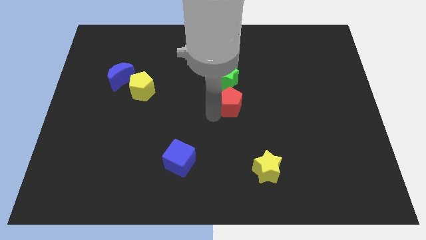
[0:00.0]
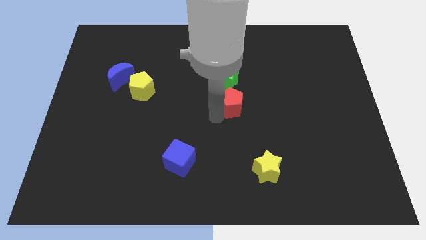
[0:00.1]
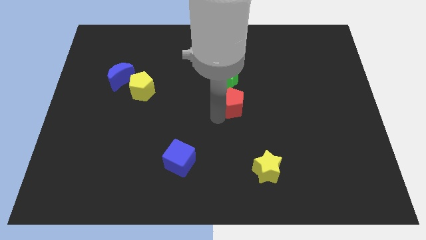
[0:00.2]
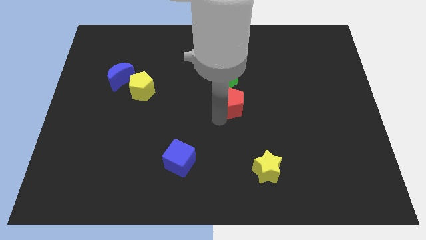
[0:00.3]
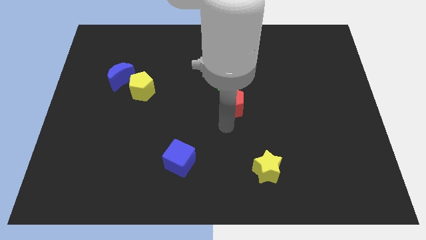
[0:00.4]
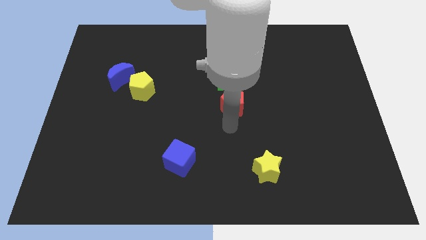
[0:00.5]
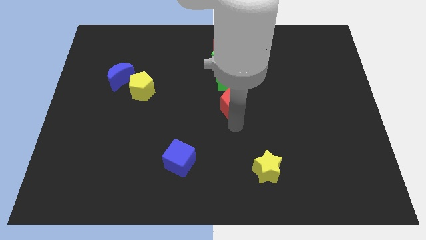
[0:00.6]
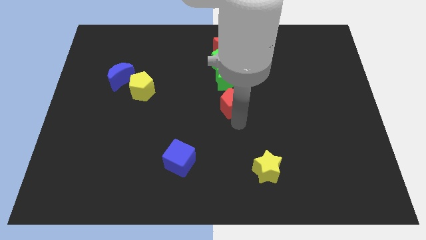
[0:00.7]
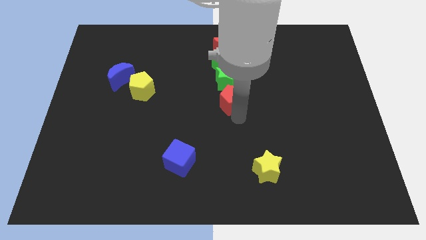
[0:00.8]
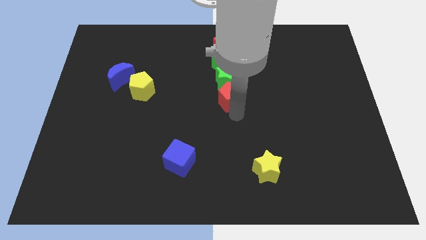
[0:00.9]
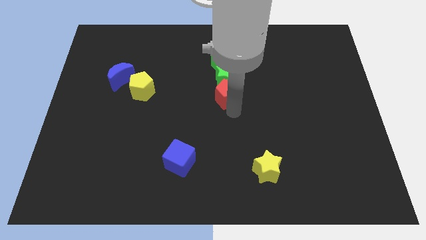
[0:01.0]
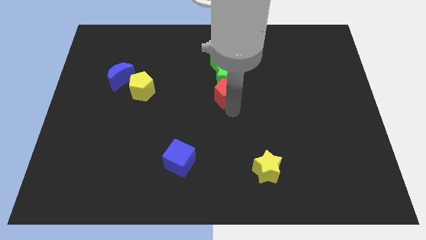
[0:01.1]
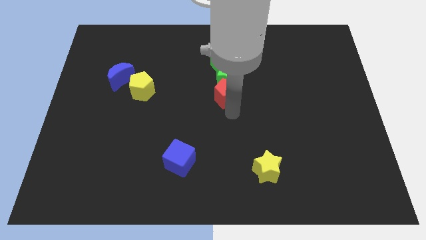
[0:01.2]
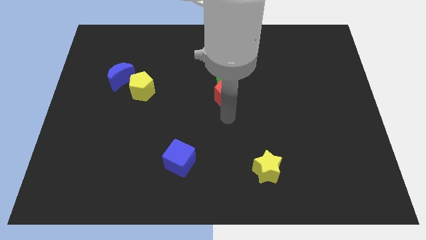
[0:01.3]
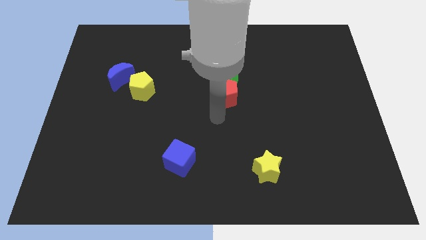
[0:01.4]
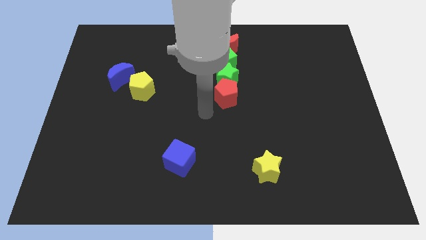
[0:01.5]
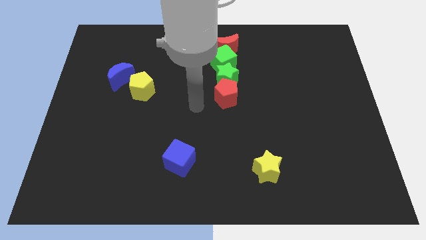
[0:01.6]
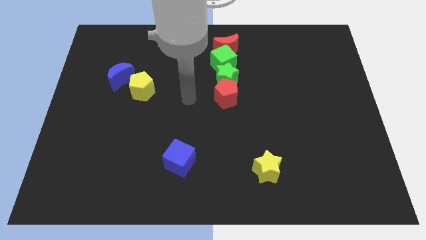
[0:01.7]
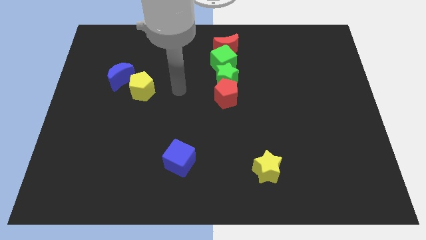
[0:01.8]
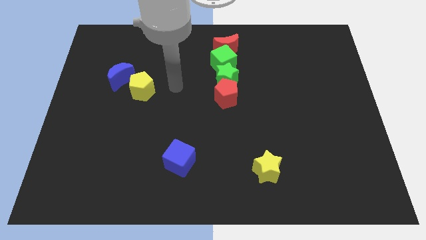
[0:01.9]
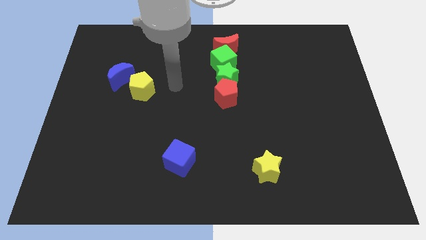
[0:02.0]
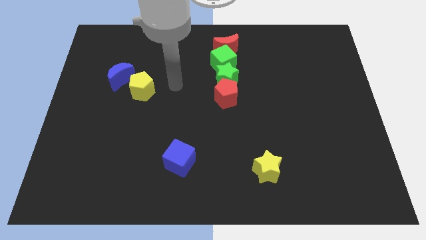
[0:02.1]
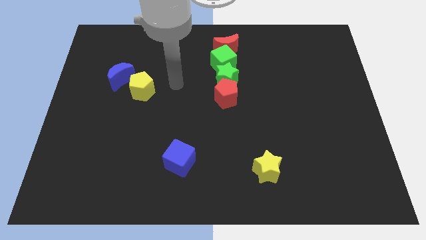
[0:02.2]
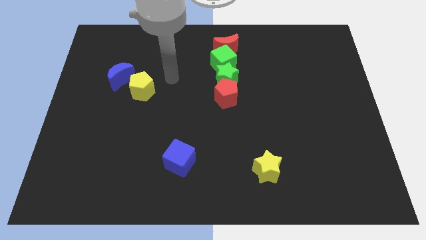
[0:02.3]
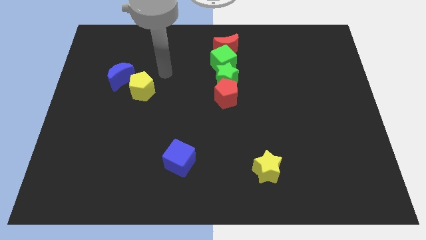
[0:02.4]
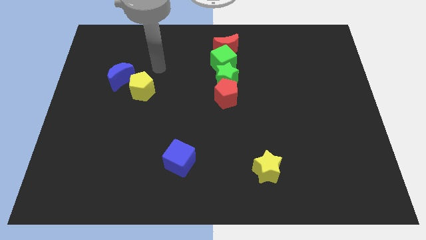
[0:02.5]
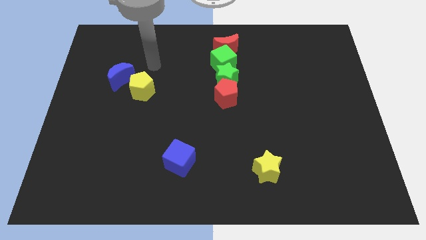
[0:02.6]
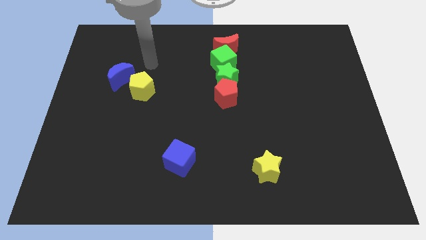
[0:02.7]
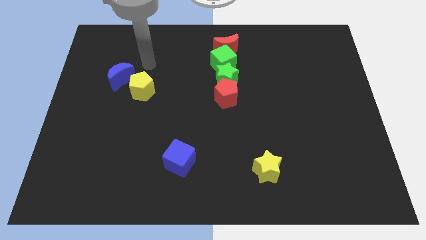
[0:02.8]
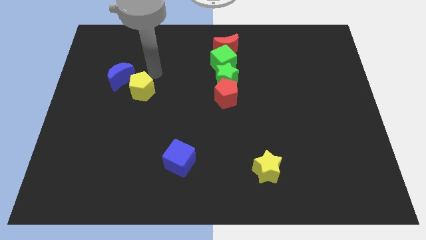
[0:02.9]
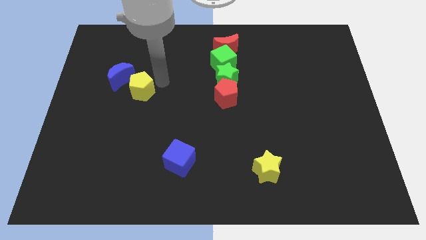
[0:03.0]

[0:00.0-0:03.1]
move your arm towards the yellow pentagon

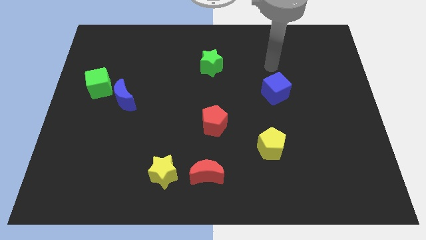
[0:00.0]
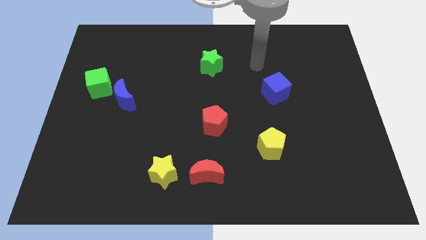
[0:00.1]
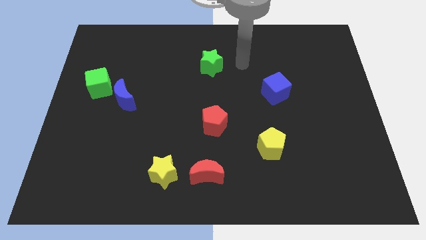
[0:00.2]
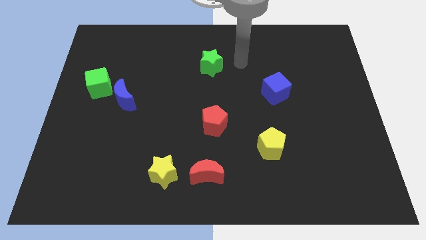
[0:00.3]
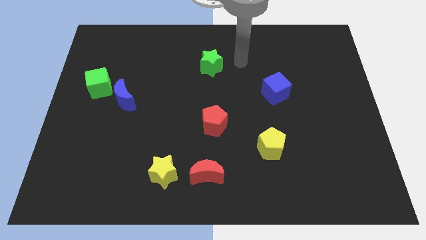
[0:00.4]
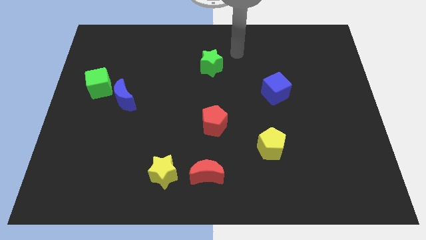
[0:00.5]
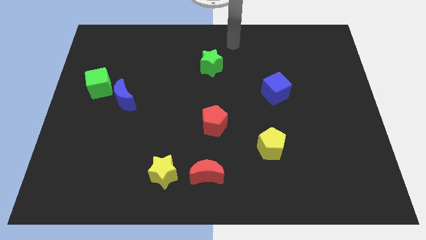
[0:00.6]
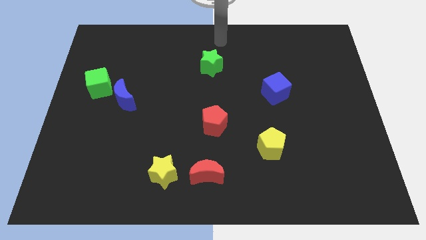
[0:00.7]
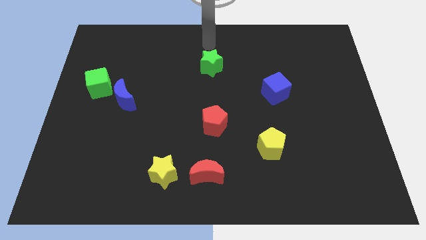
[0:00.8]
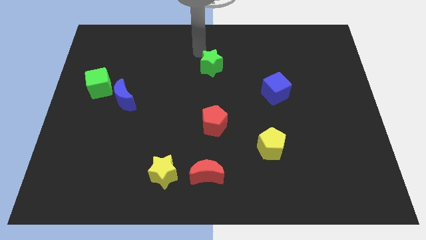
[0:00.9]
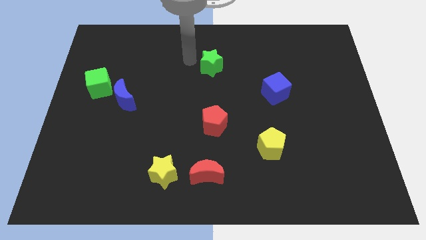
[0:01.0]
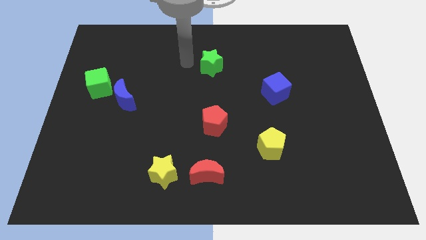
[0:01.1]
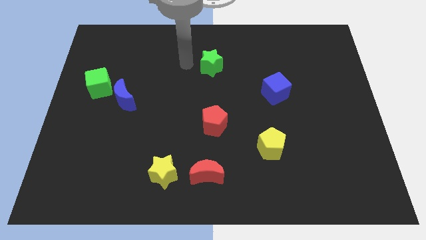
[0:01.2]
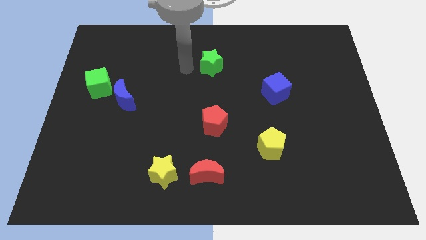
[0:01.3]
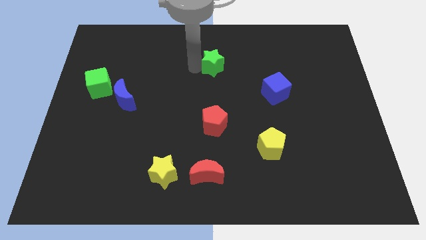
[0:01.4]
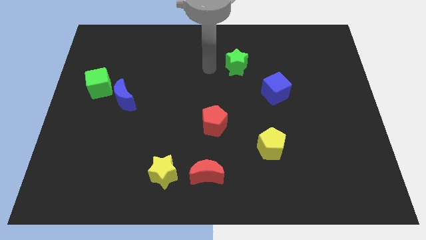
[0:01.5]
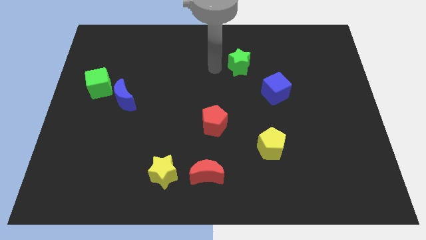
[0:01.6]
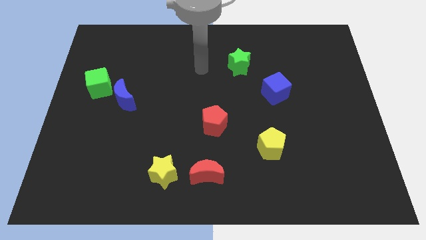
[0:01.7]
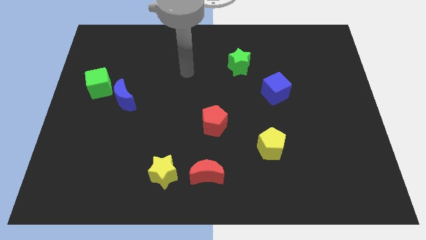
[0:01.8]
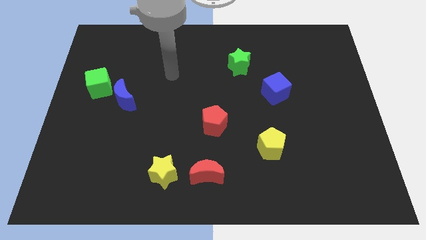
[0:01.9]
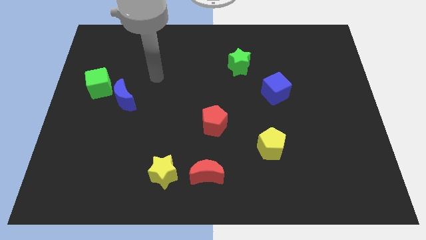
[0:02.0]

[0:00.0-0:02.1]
slightly move the green star to the right side

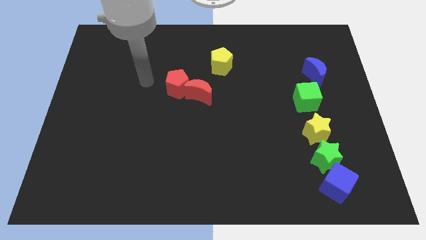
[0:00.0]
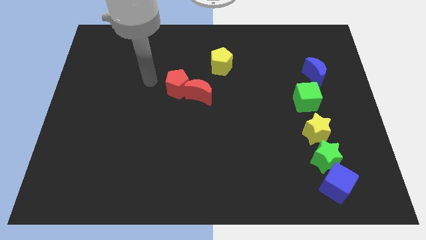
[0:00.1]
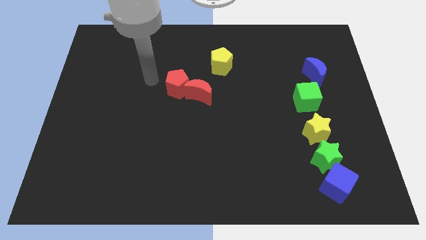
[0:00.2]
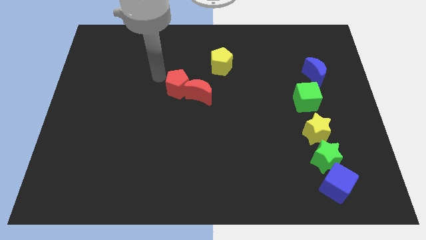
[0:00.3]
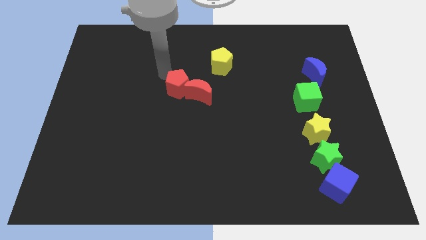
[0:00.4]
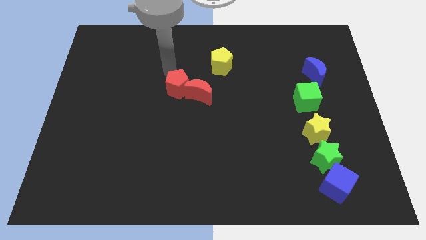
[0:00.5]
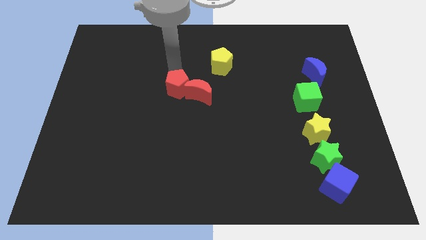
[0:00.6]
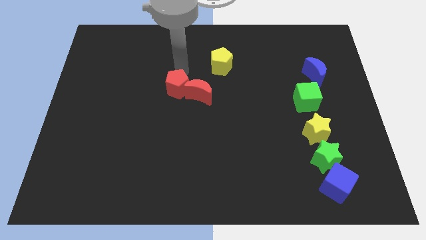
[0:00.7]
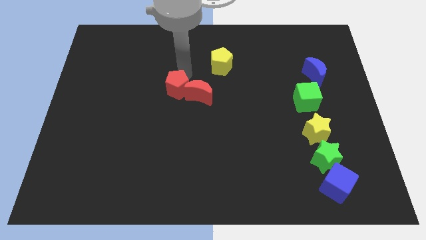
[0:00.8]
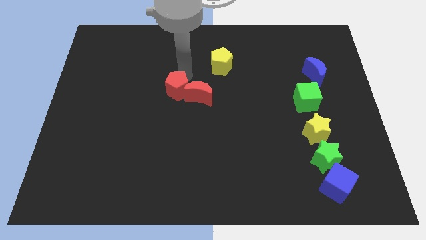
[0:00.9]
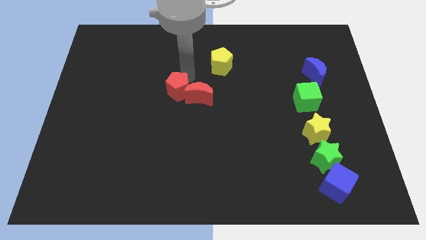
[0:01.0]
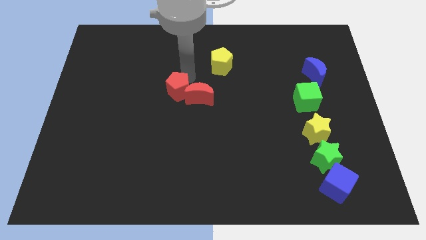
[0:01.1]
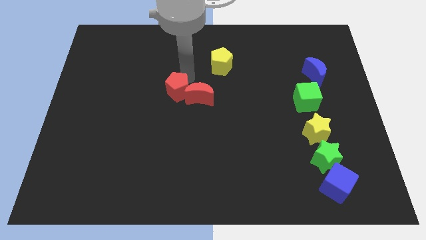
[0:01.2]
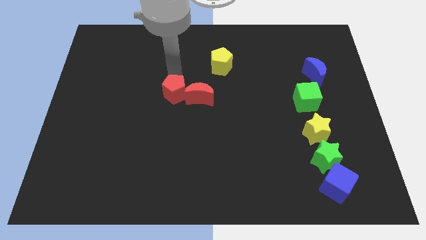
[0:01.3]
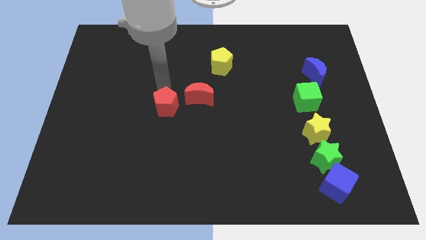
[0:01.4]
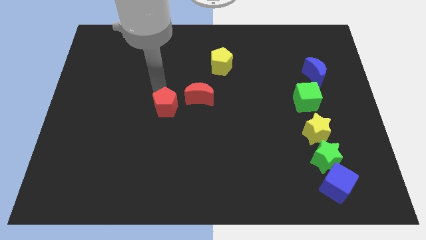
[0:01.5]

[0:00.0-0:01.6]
move your arm close to the red pentagon

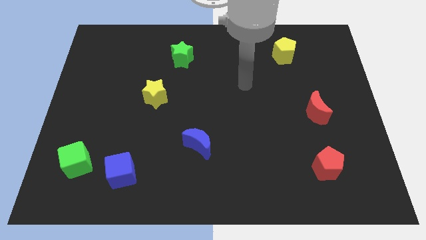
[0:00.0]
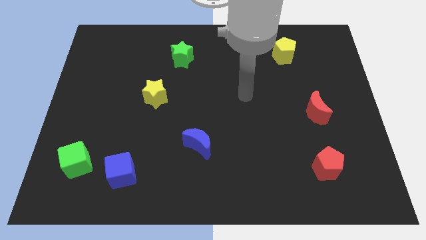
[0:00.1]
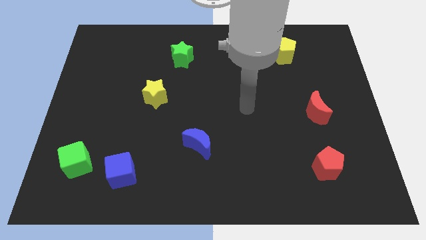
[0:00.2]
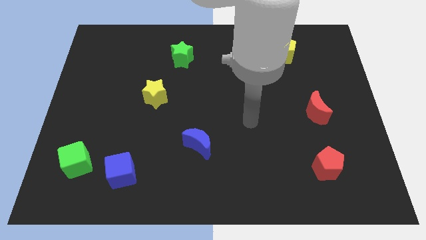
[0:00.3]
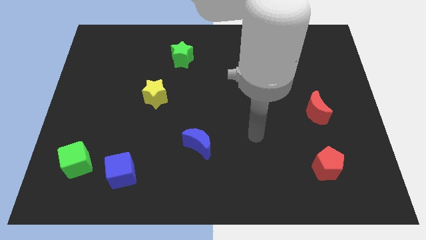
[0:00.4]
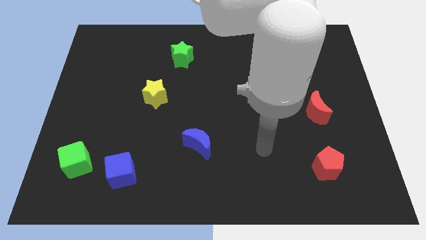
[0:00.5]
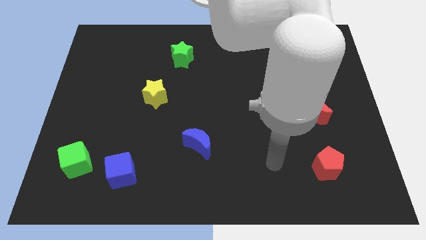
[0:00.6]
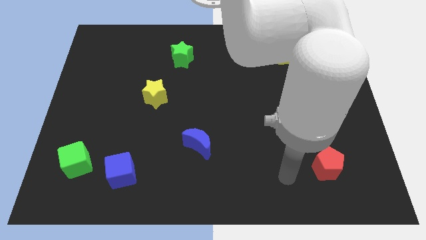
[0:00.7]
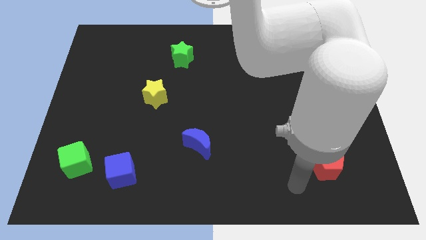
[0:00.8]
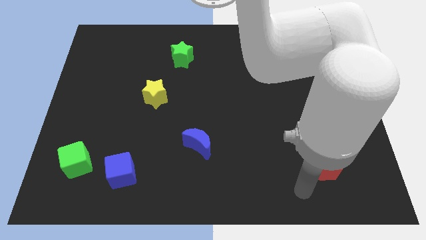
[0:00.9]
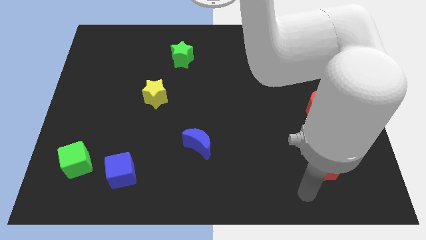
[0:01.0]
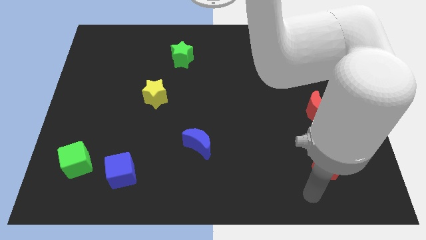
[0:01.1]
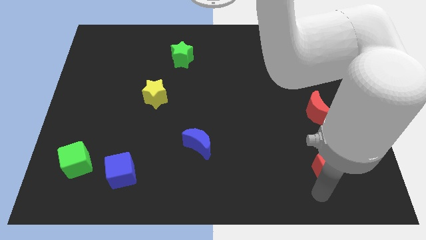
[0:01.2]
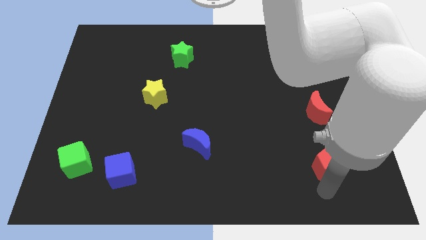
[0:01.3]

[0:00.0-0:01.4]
point your arm at the bottom of the red pentagon

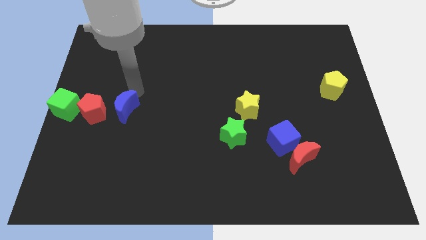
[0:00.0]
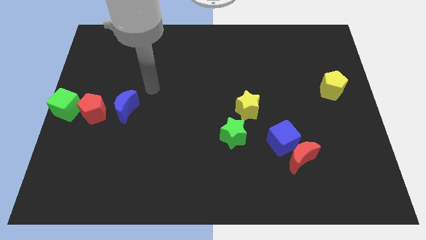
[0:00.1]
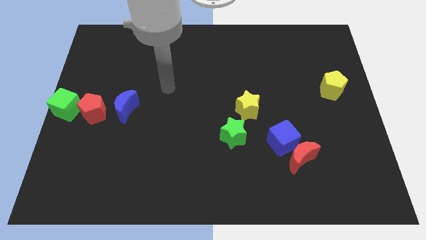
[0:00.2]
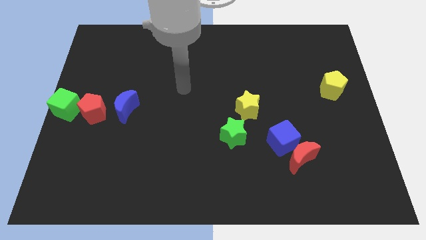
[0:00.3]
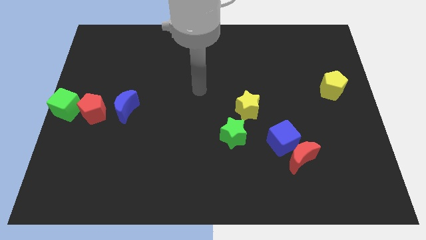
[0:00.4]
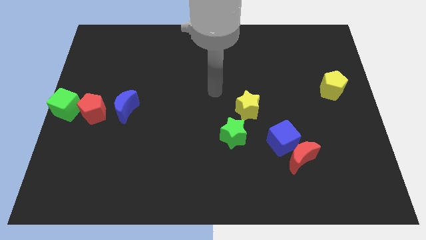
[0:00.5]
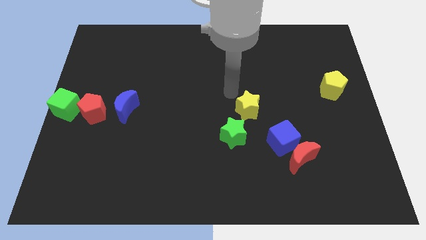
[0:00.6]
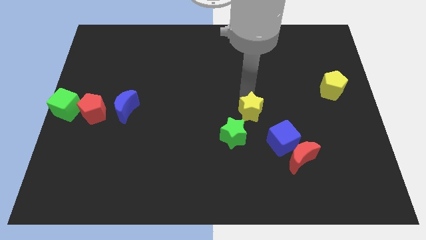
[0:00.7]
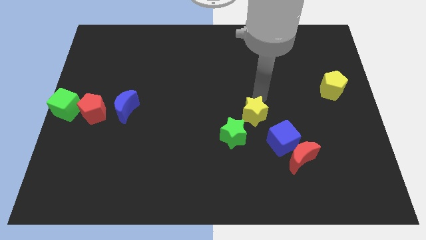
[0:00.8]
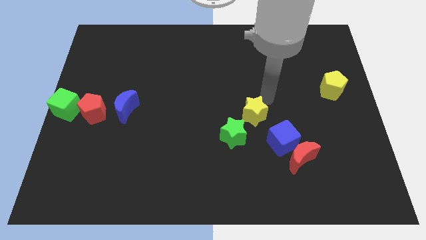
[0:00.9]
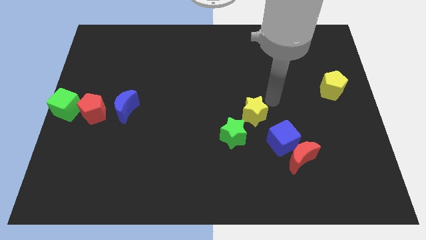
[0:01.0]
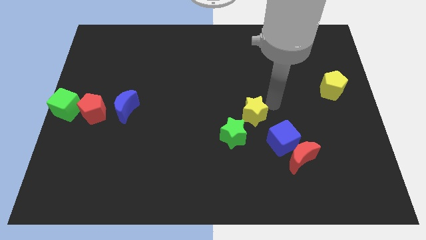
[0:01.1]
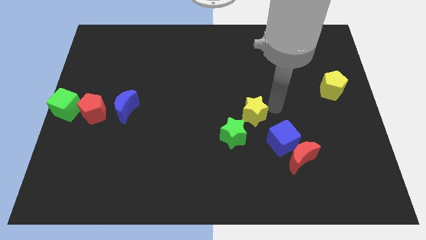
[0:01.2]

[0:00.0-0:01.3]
move the arm away from the blue moon
